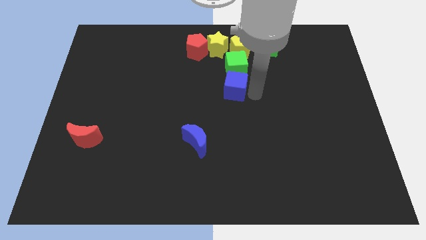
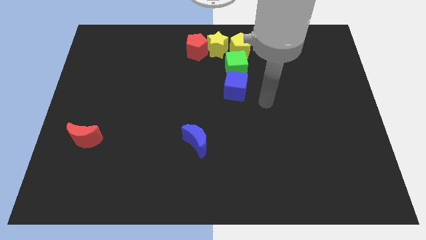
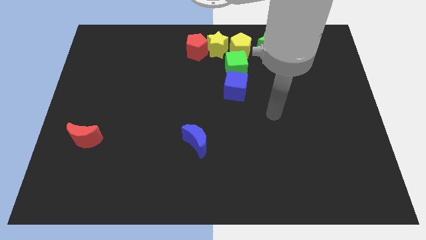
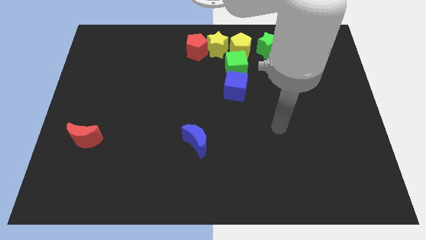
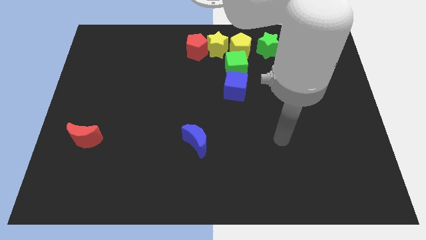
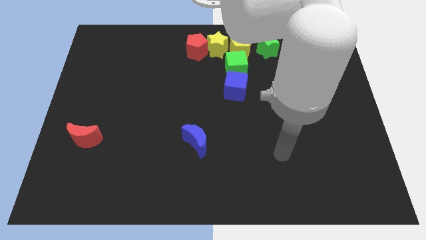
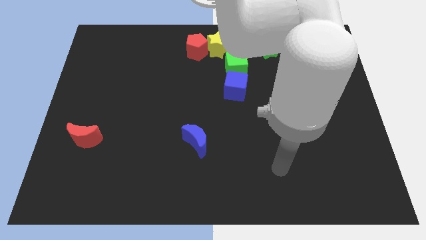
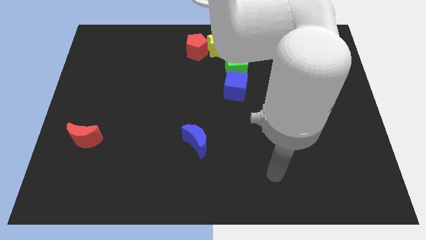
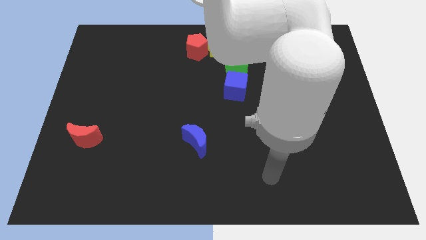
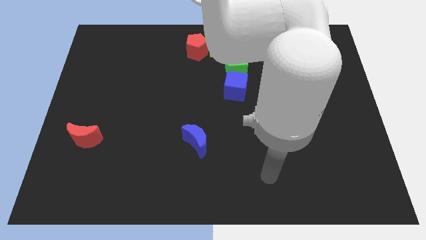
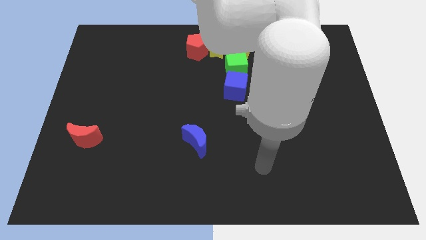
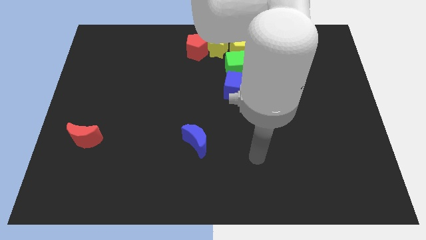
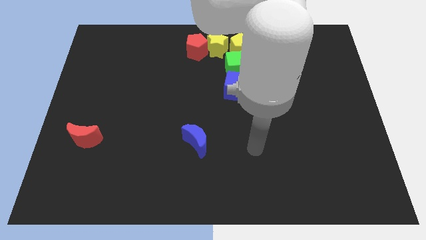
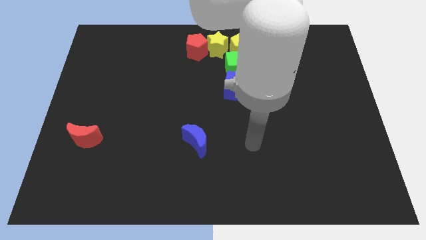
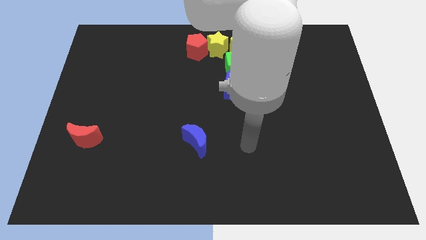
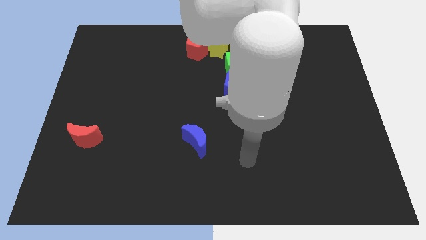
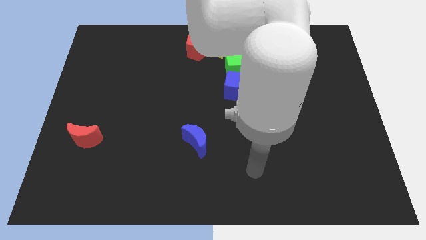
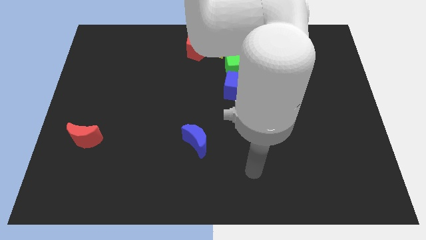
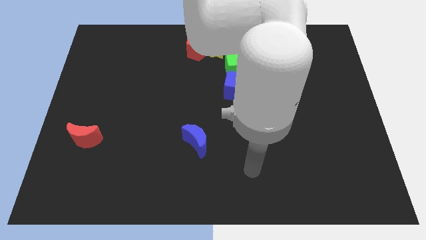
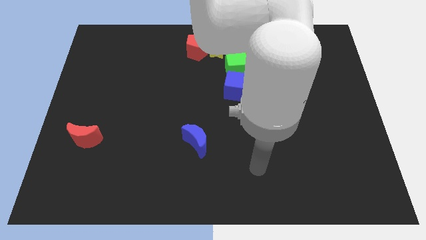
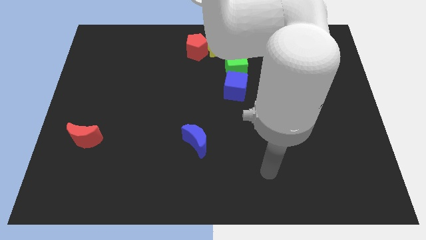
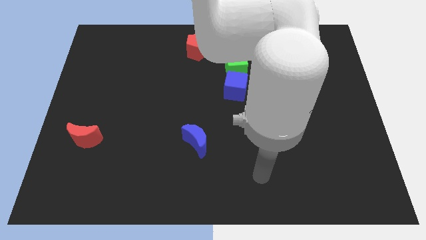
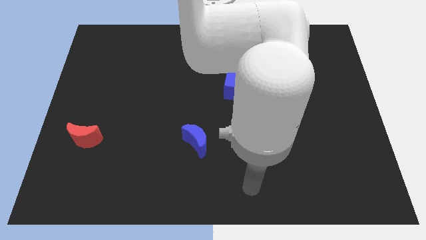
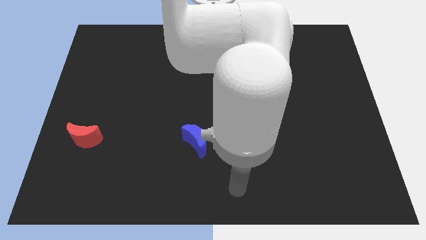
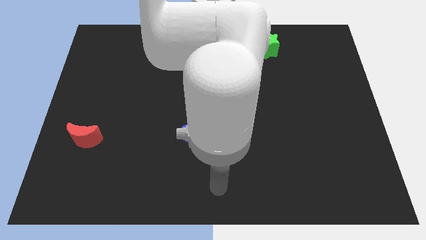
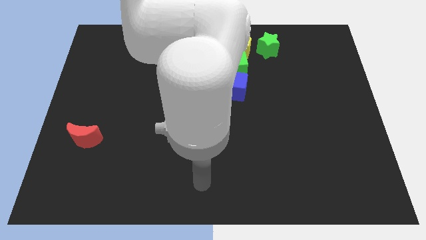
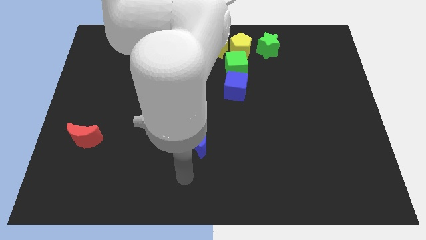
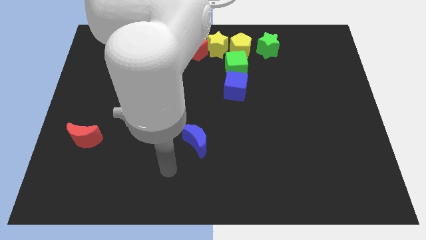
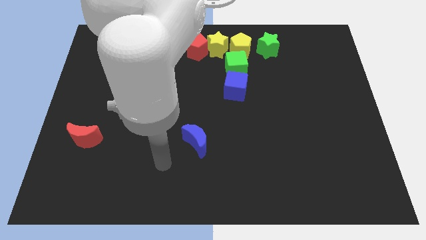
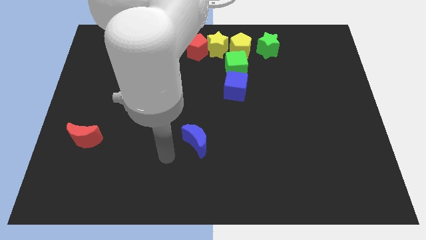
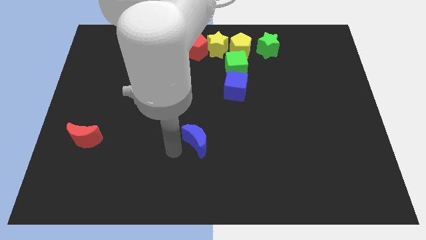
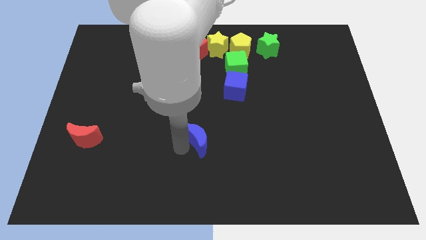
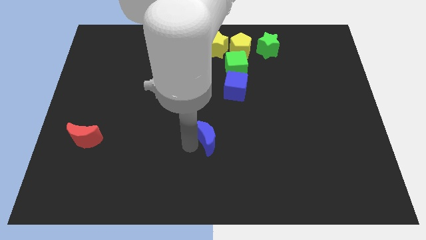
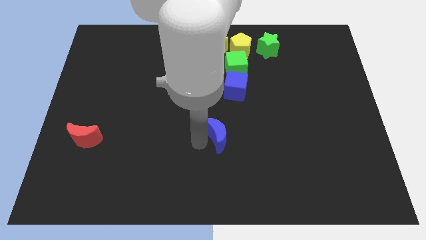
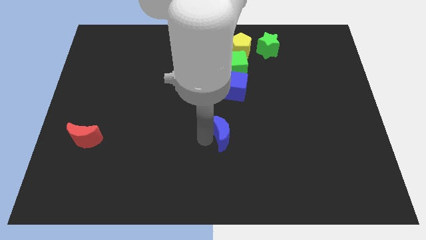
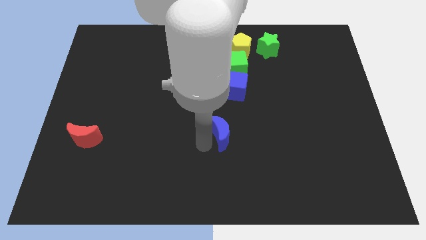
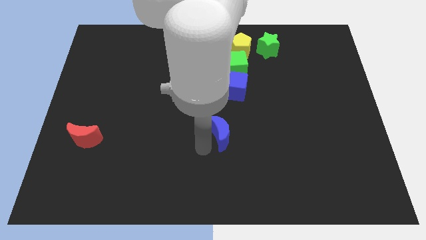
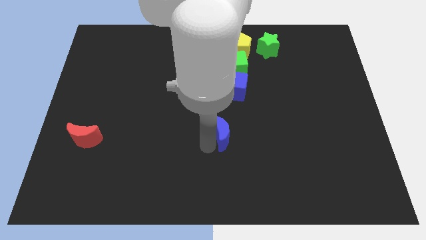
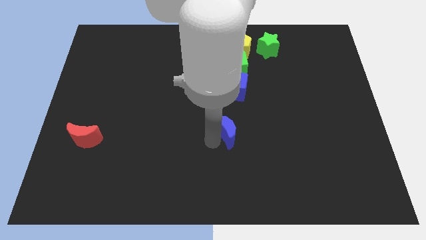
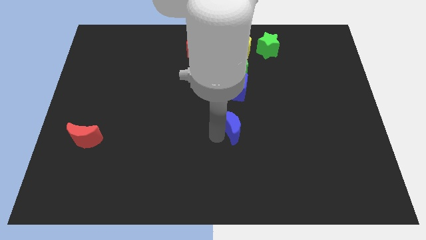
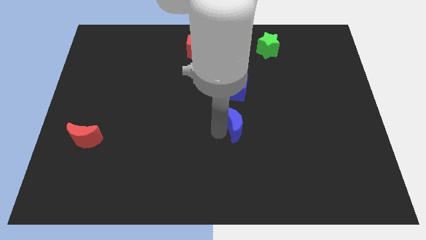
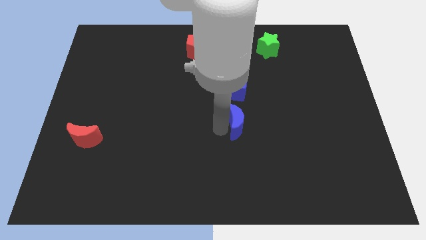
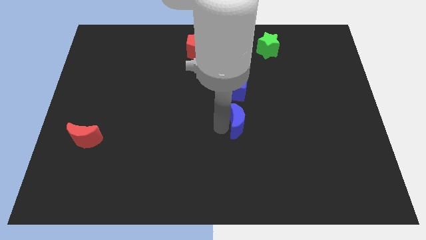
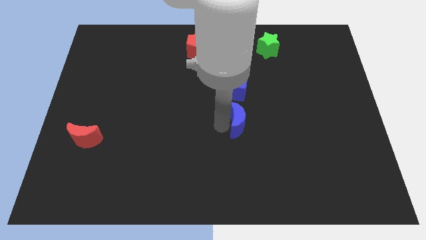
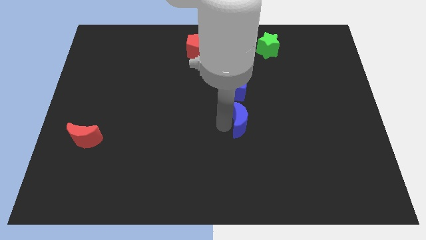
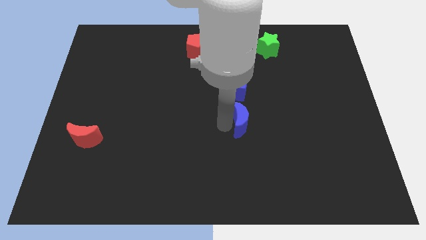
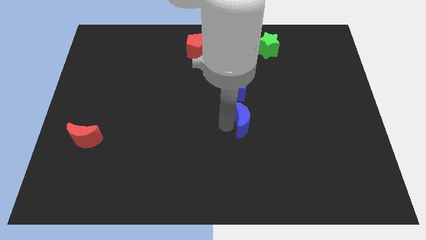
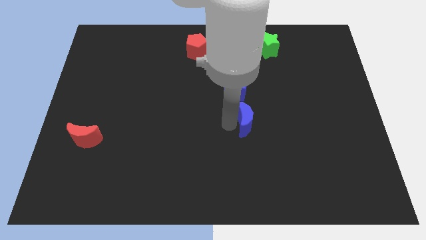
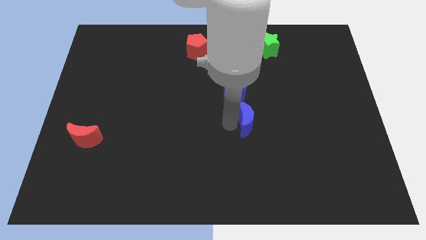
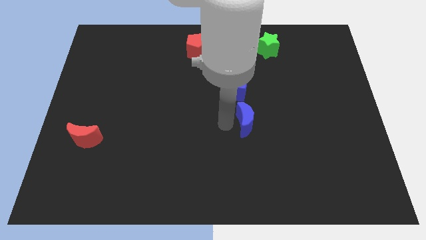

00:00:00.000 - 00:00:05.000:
move the arm to the left of the blue crescent

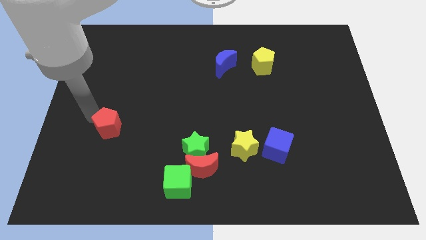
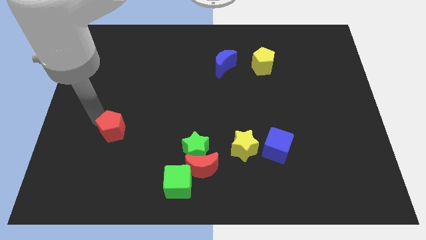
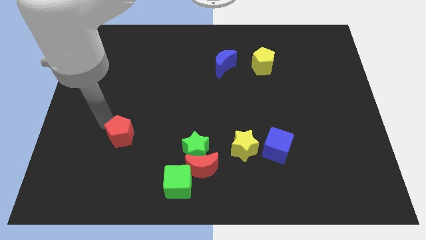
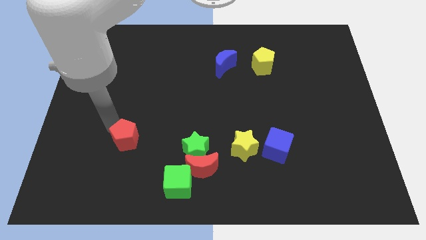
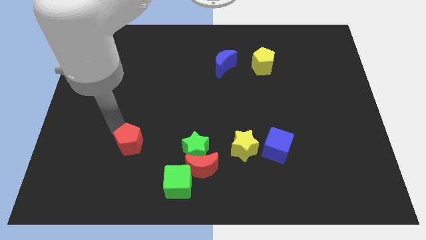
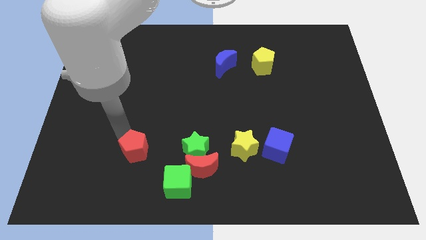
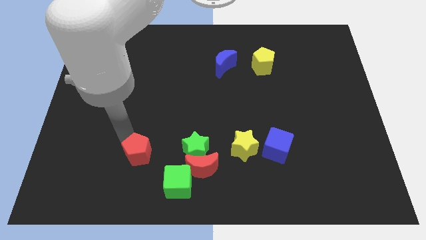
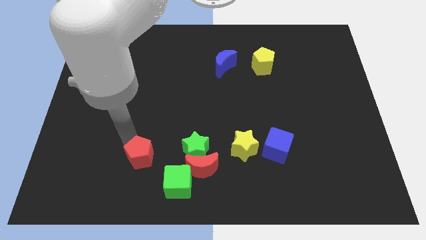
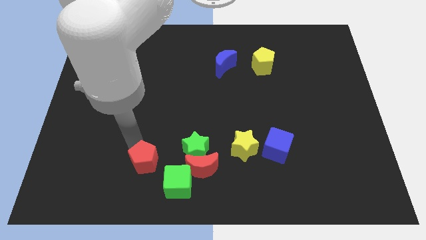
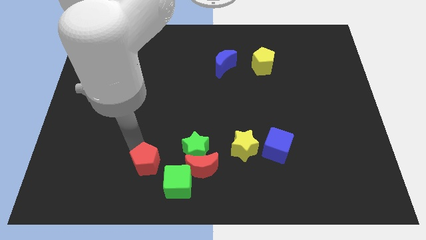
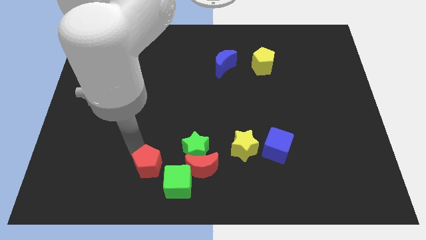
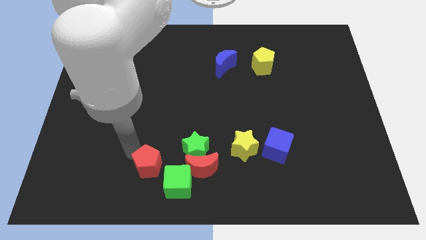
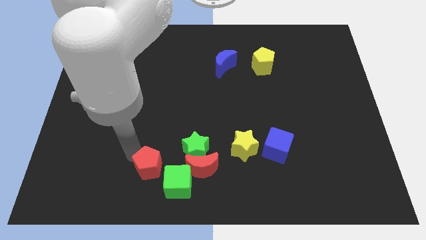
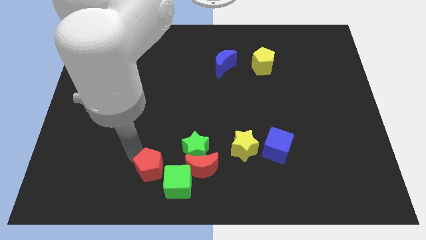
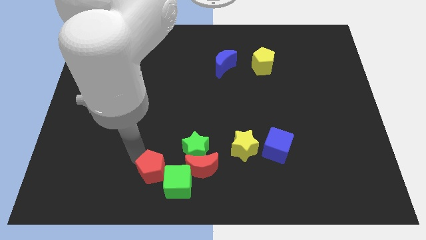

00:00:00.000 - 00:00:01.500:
put the red pentagon on the top left of the green cube

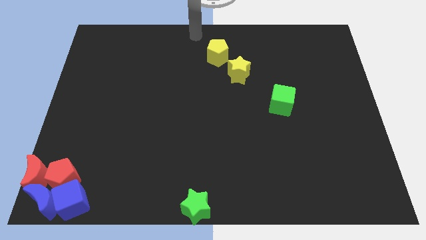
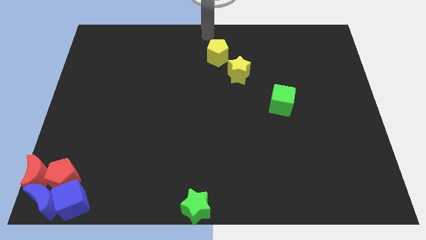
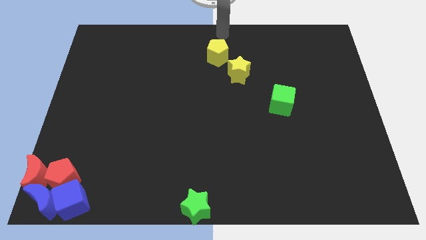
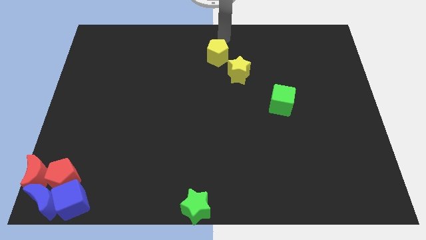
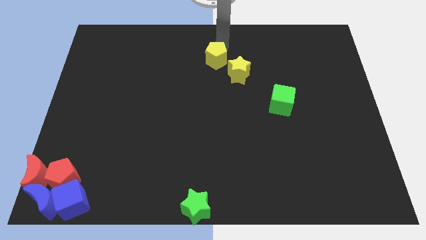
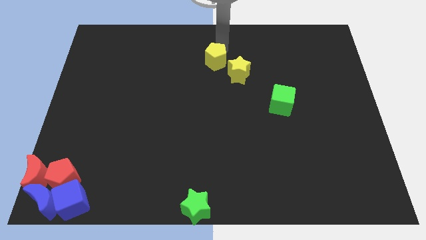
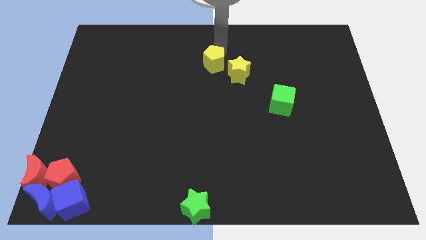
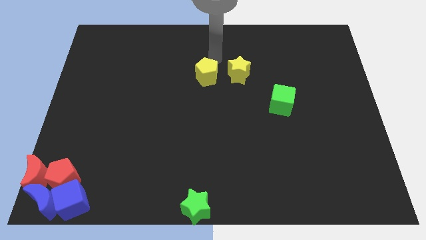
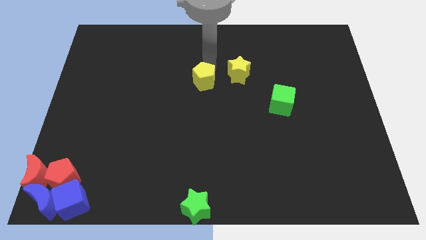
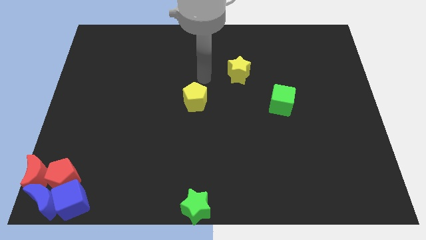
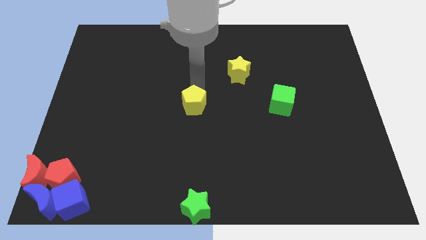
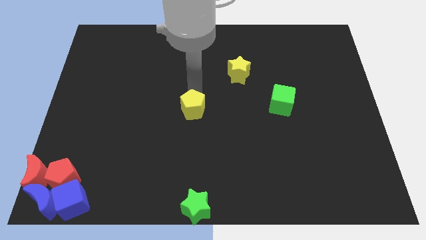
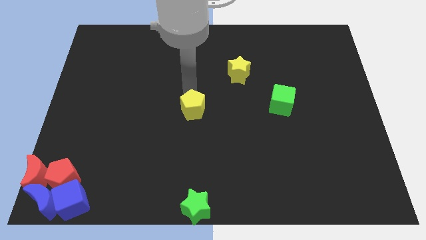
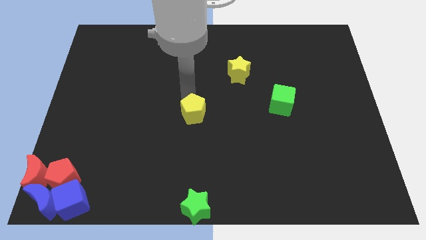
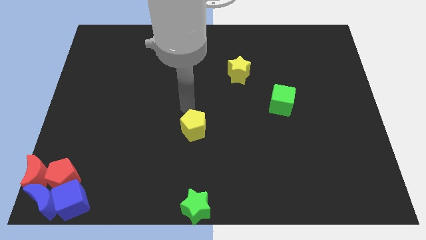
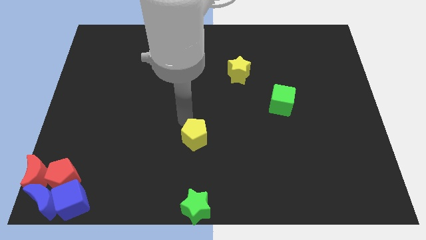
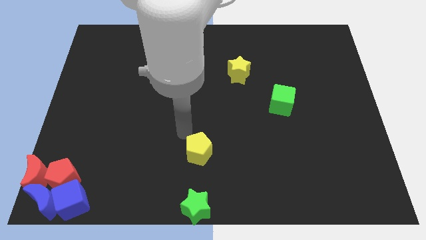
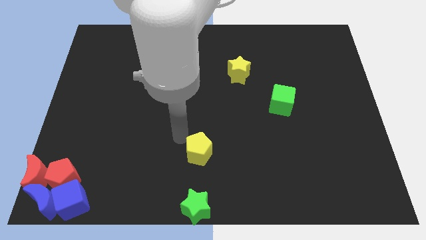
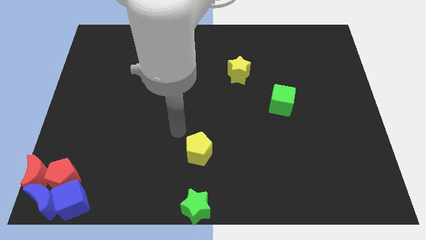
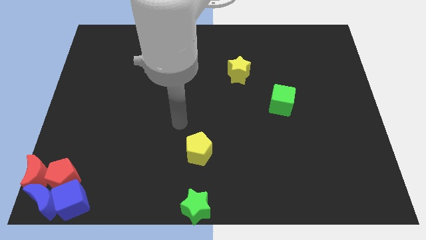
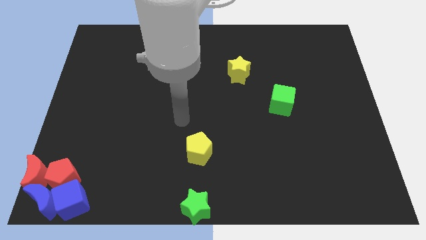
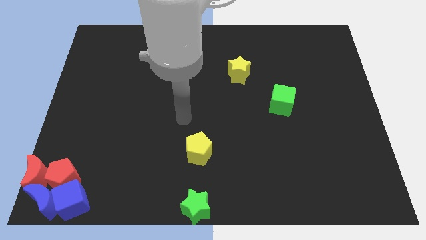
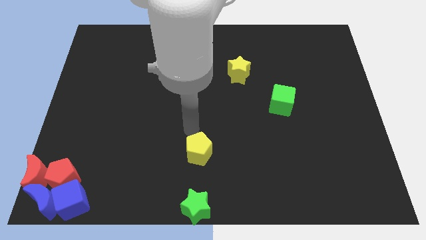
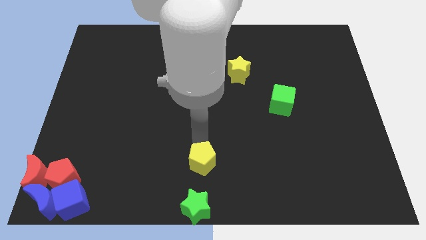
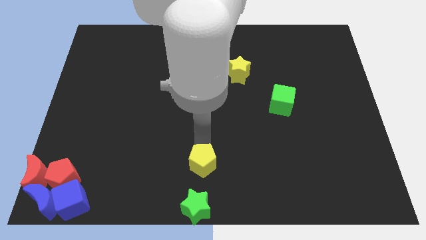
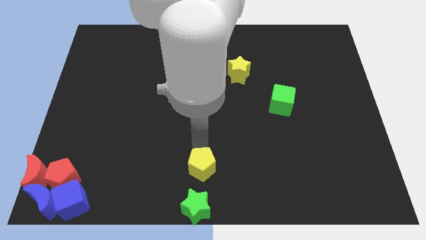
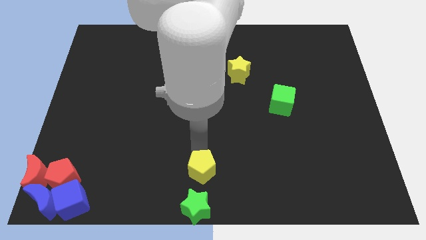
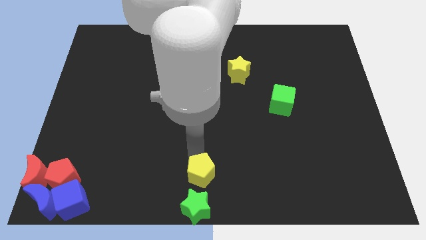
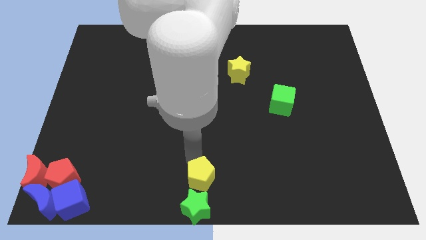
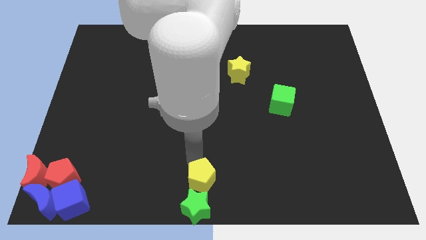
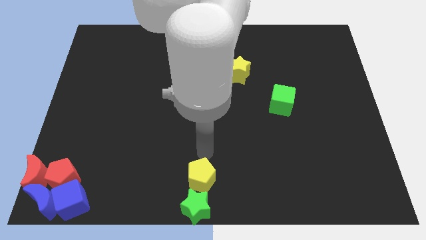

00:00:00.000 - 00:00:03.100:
move yellow pentagon into green star
